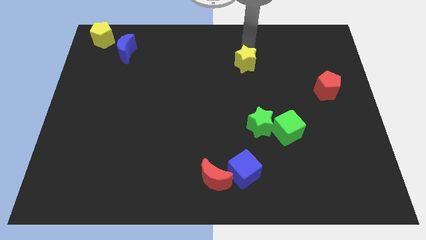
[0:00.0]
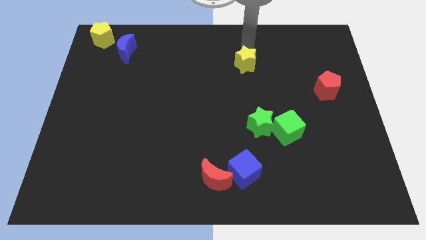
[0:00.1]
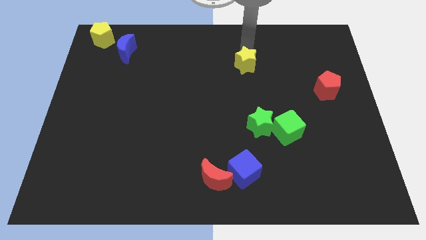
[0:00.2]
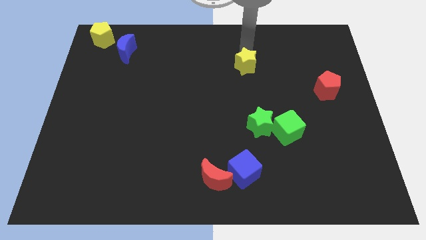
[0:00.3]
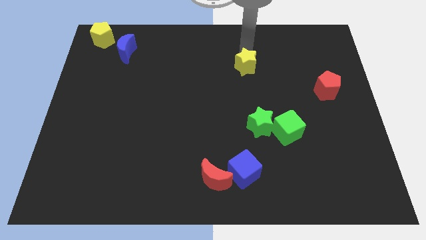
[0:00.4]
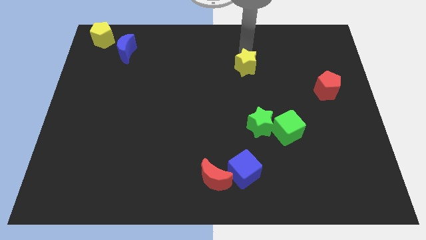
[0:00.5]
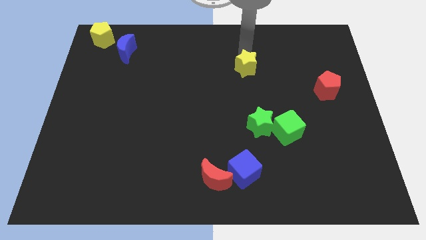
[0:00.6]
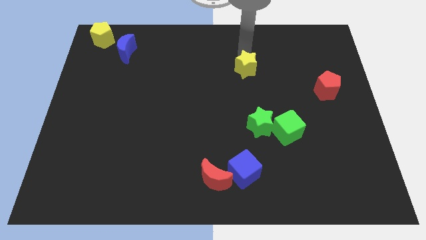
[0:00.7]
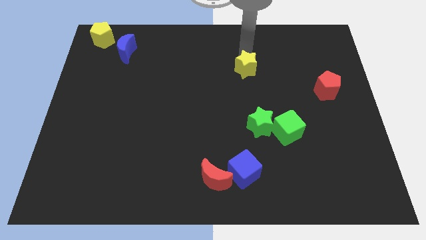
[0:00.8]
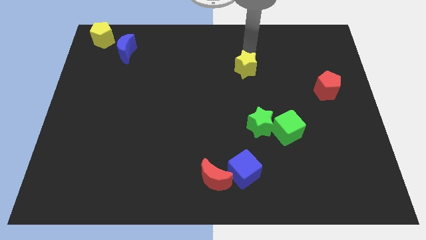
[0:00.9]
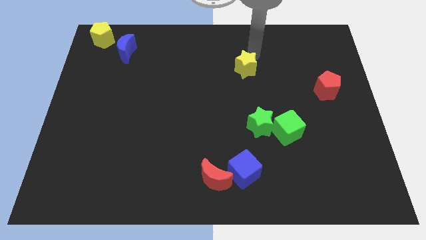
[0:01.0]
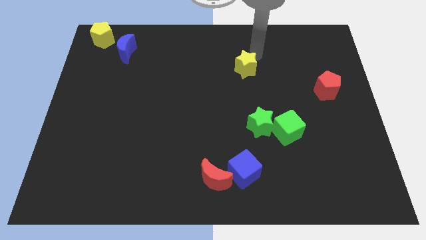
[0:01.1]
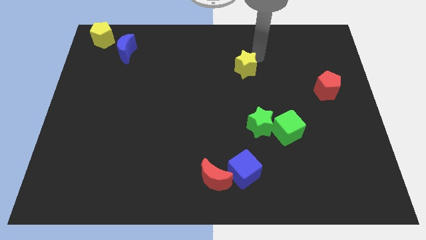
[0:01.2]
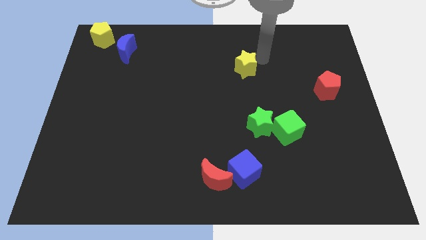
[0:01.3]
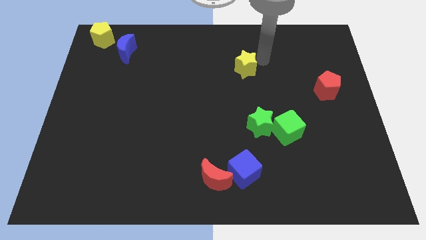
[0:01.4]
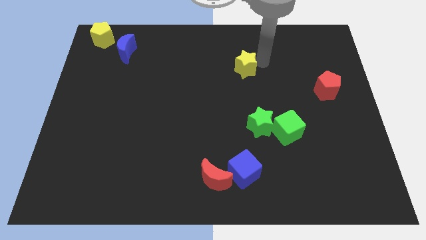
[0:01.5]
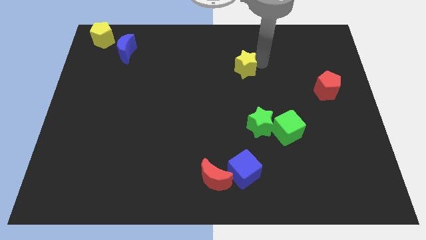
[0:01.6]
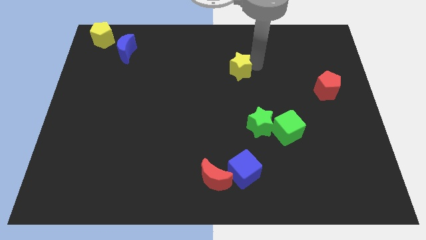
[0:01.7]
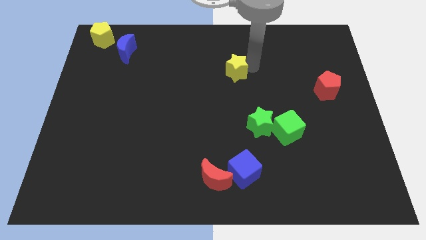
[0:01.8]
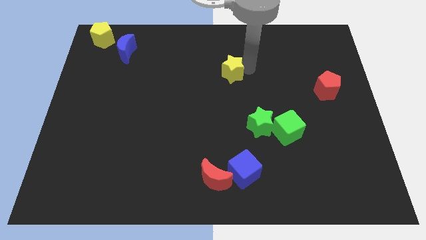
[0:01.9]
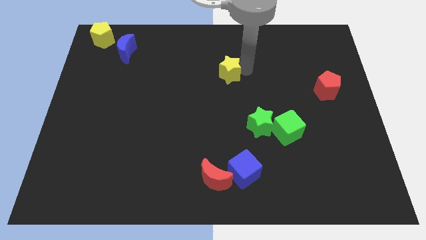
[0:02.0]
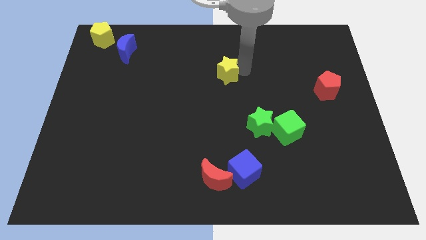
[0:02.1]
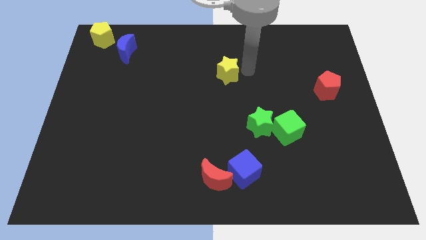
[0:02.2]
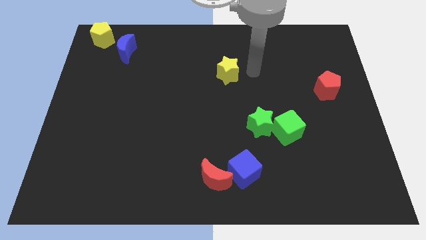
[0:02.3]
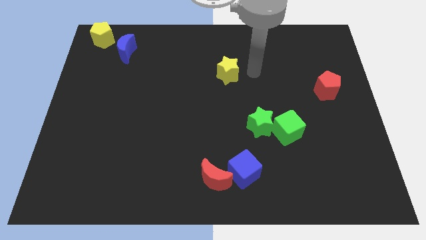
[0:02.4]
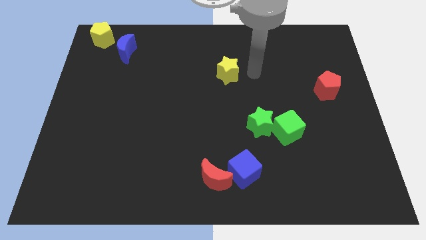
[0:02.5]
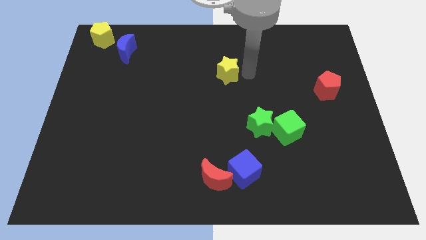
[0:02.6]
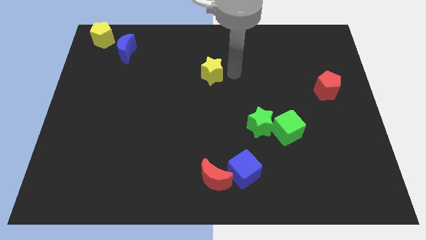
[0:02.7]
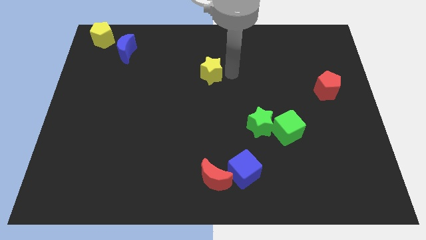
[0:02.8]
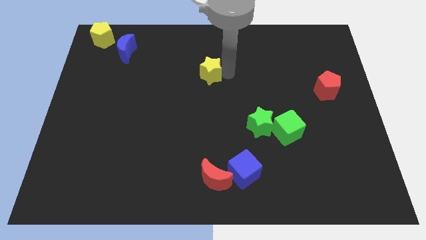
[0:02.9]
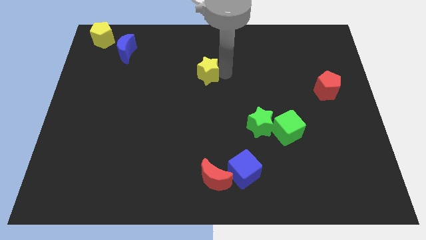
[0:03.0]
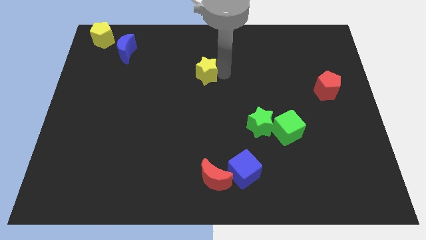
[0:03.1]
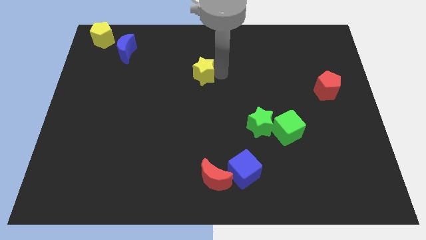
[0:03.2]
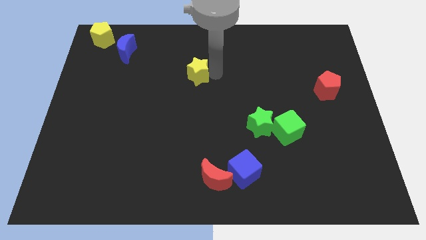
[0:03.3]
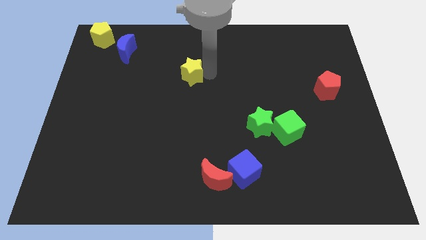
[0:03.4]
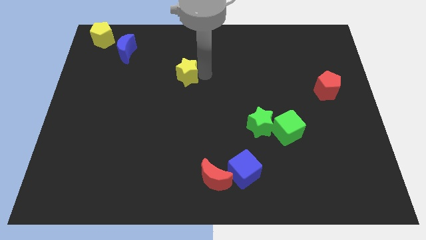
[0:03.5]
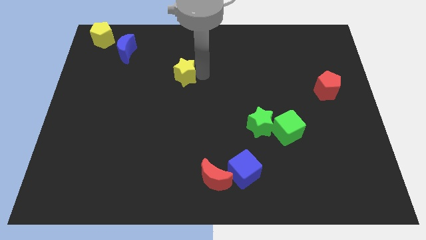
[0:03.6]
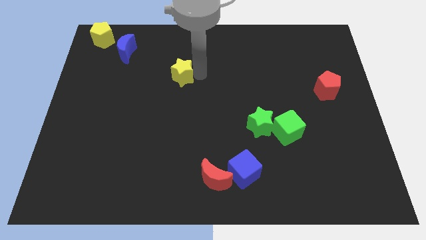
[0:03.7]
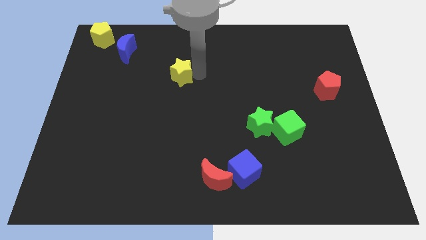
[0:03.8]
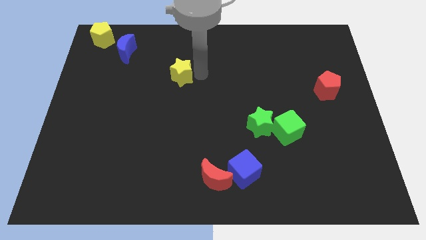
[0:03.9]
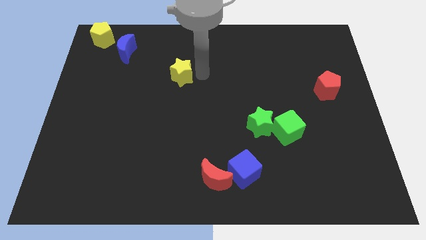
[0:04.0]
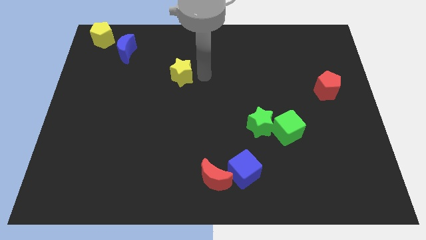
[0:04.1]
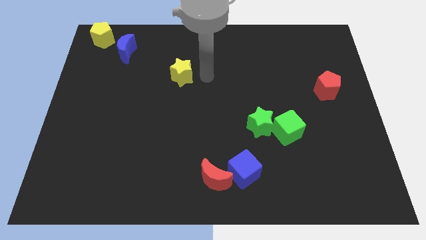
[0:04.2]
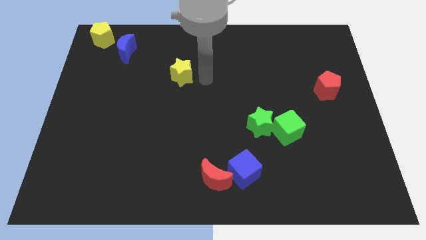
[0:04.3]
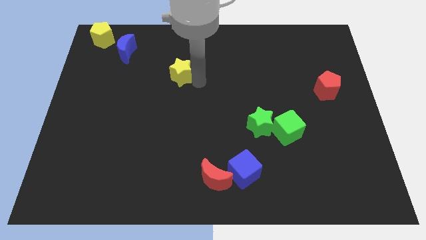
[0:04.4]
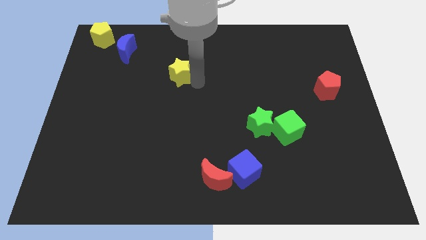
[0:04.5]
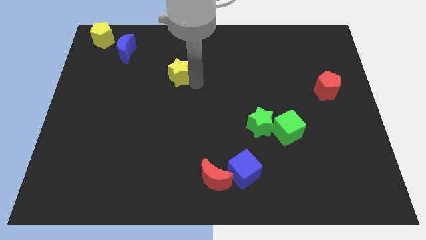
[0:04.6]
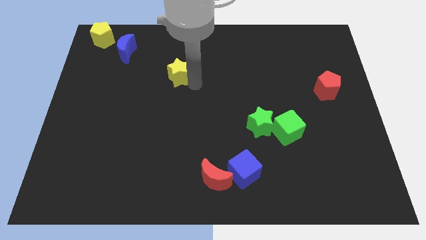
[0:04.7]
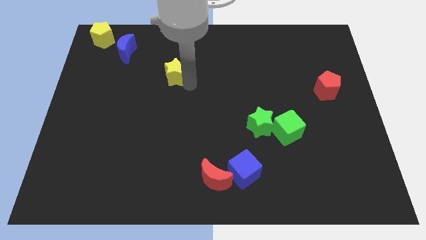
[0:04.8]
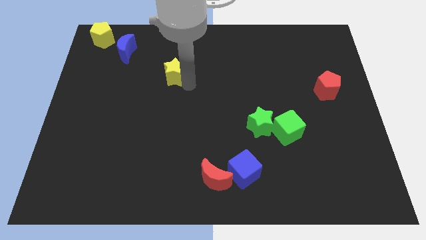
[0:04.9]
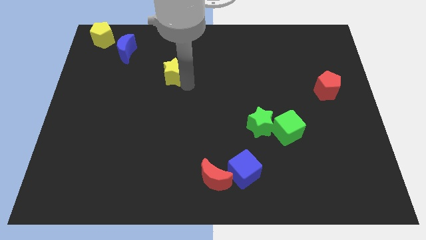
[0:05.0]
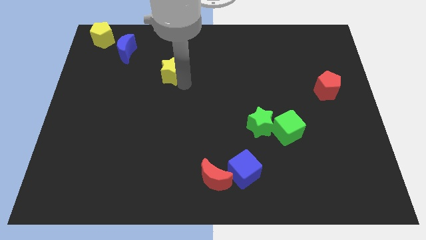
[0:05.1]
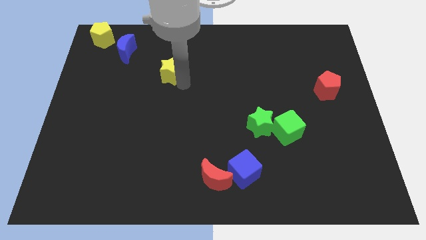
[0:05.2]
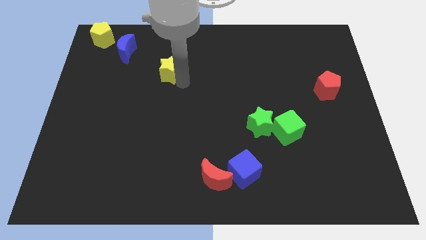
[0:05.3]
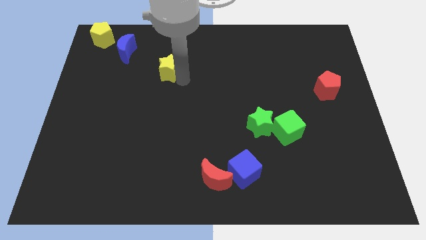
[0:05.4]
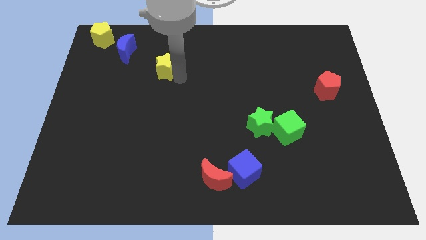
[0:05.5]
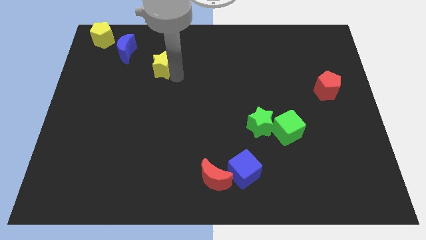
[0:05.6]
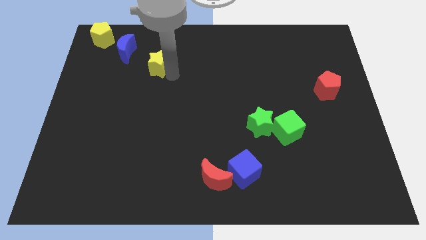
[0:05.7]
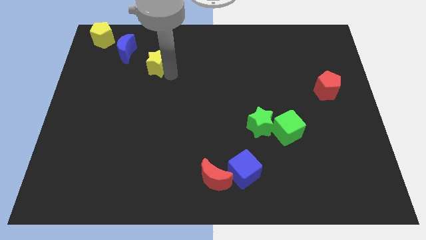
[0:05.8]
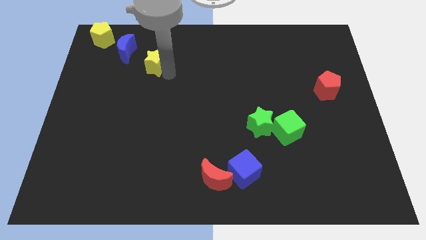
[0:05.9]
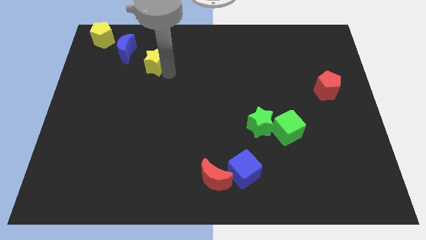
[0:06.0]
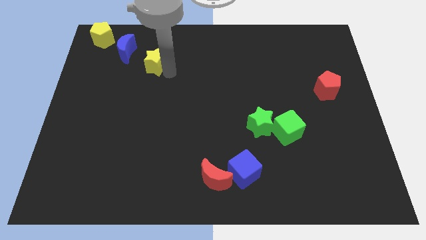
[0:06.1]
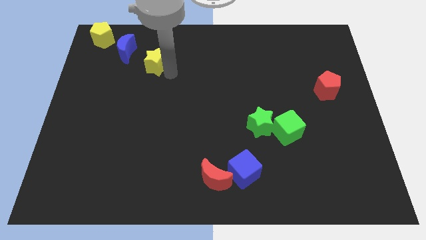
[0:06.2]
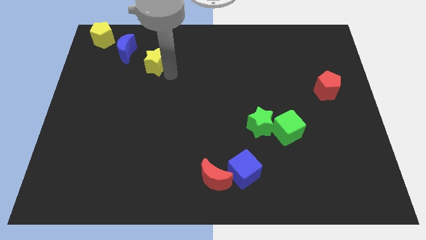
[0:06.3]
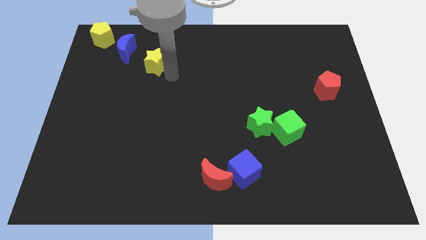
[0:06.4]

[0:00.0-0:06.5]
move the yellow star diagonal to the blue moon

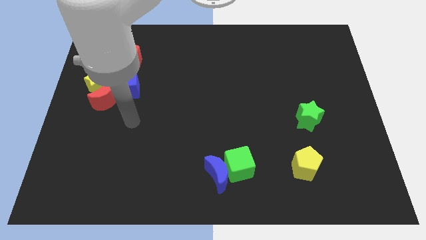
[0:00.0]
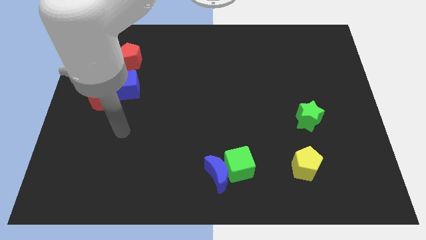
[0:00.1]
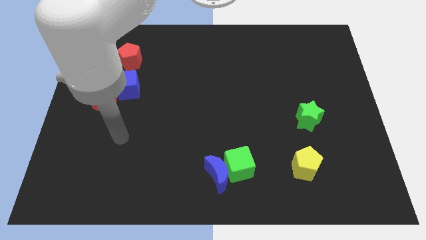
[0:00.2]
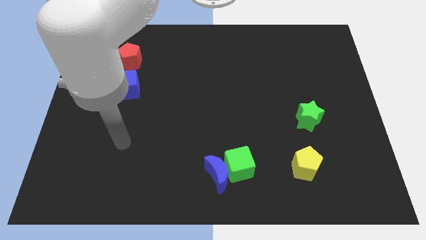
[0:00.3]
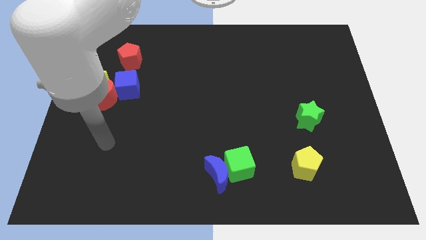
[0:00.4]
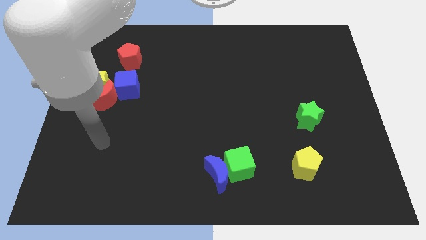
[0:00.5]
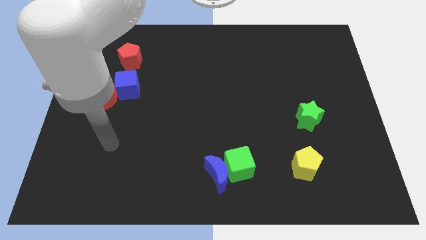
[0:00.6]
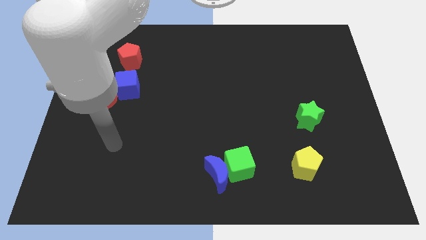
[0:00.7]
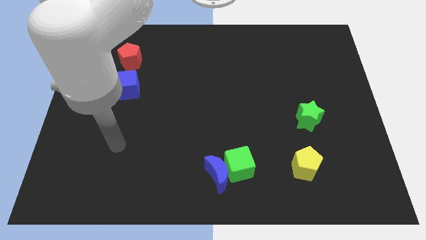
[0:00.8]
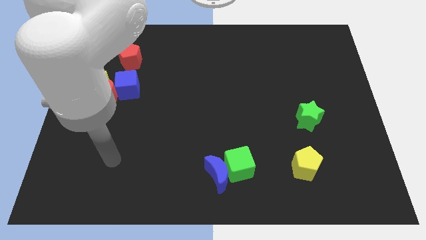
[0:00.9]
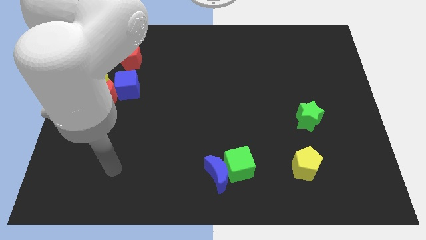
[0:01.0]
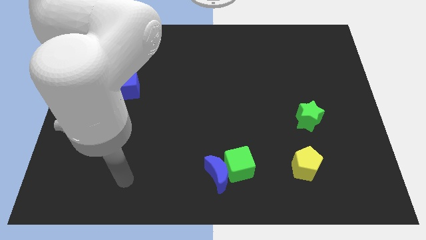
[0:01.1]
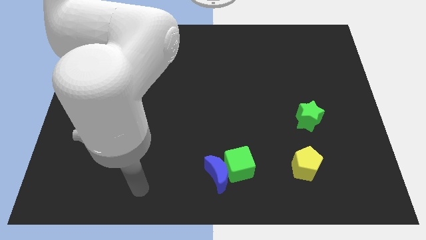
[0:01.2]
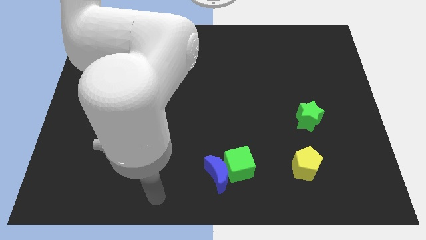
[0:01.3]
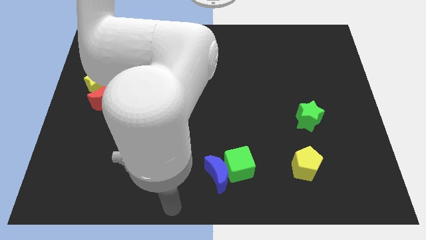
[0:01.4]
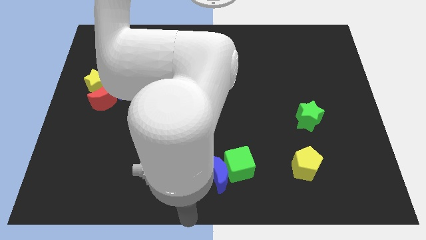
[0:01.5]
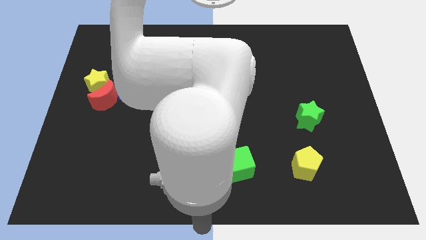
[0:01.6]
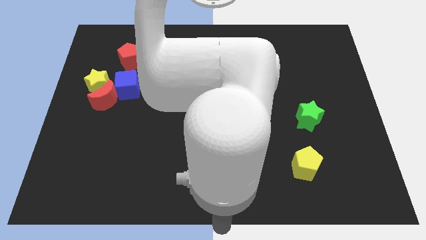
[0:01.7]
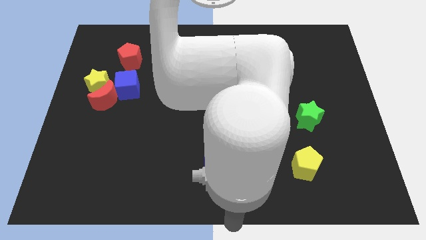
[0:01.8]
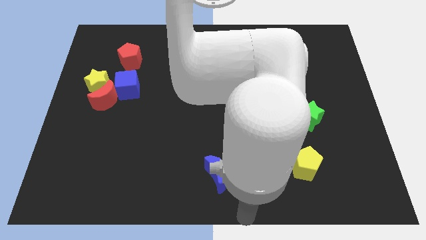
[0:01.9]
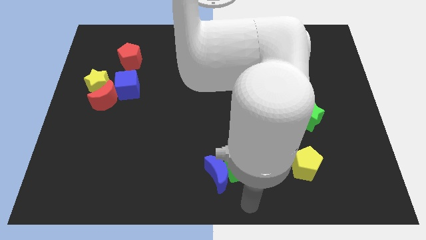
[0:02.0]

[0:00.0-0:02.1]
move your arm to the bottom side of green cube

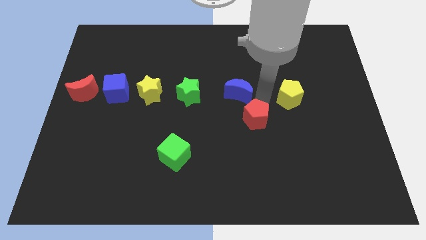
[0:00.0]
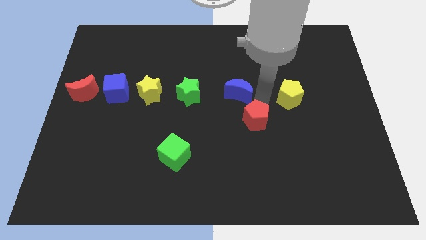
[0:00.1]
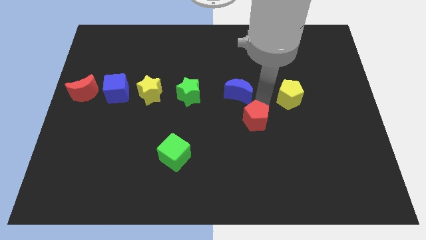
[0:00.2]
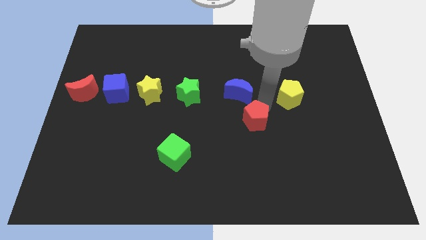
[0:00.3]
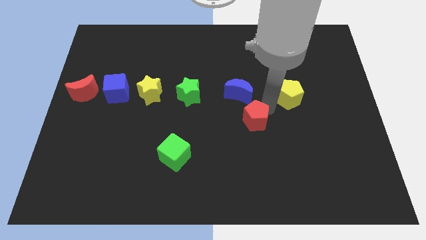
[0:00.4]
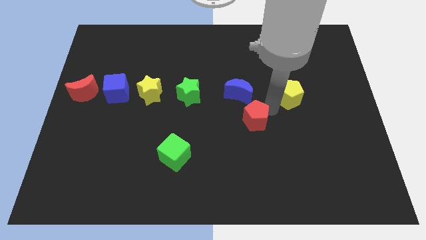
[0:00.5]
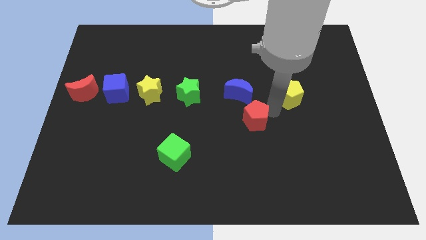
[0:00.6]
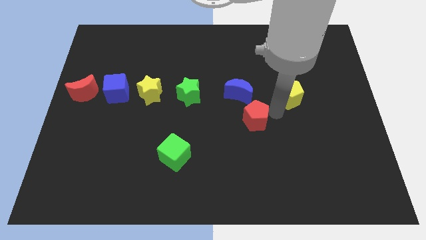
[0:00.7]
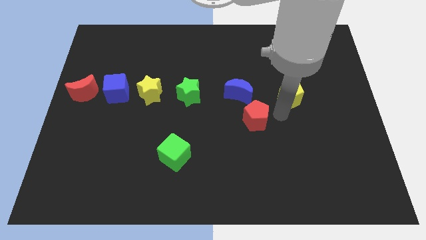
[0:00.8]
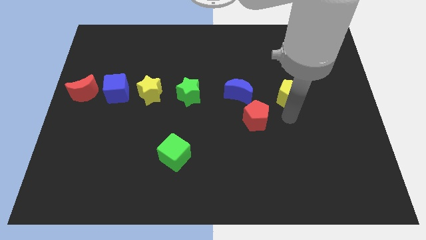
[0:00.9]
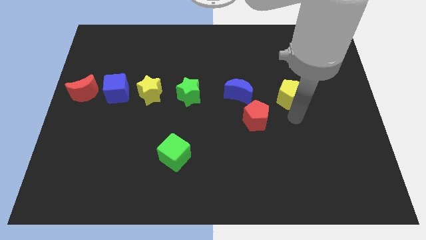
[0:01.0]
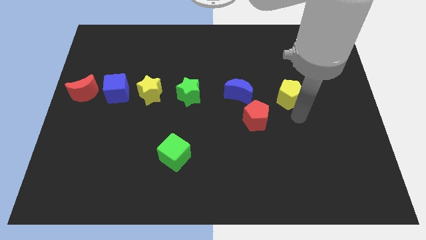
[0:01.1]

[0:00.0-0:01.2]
place your arm below the yellow pentagon
